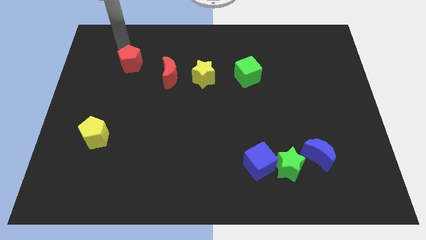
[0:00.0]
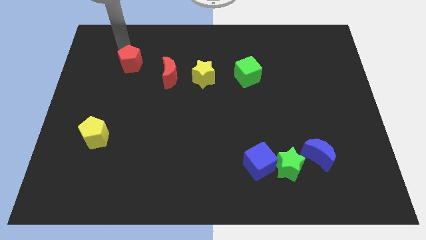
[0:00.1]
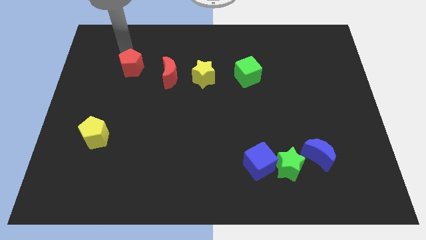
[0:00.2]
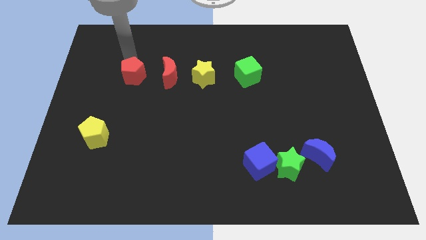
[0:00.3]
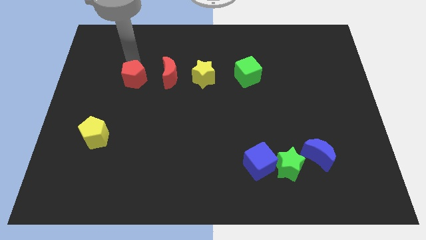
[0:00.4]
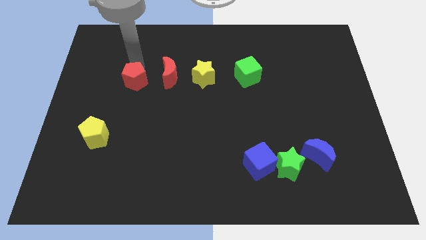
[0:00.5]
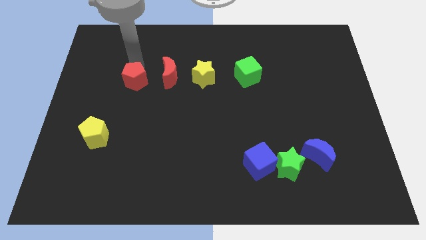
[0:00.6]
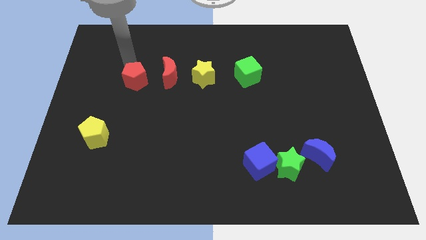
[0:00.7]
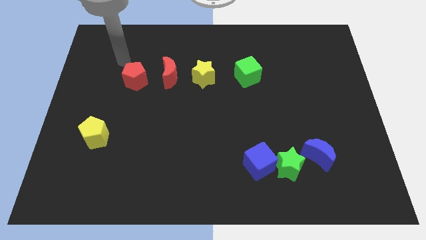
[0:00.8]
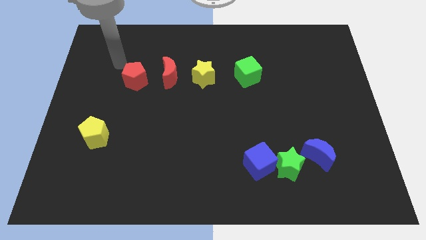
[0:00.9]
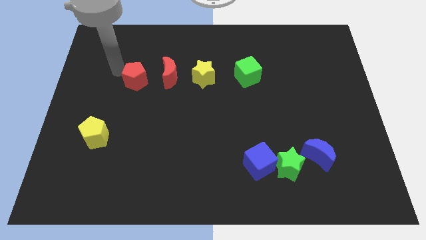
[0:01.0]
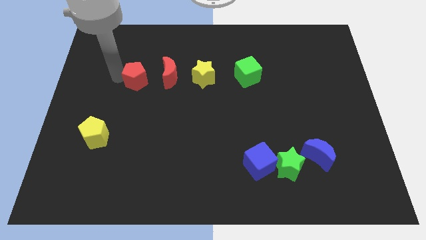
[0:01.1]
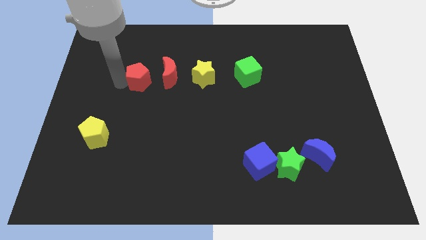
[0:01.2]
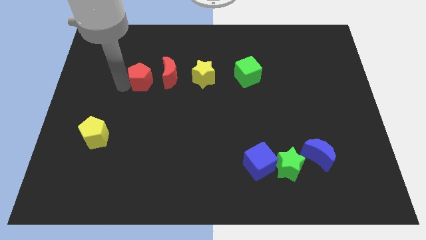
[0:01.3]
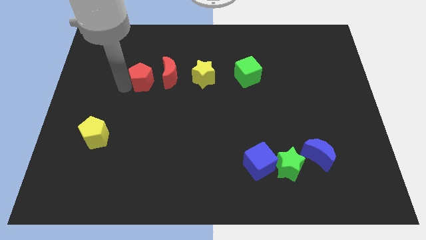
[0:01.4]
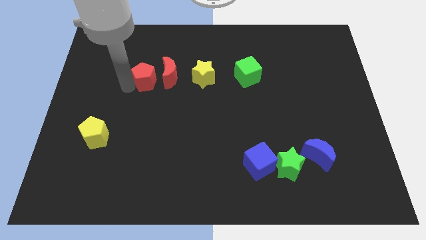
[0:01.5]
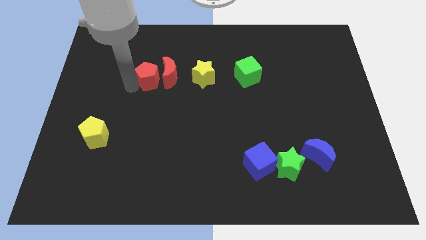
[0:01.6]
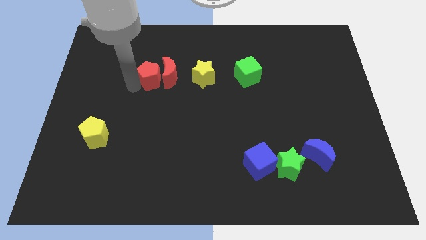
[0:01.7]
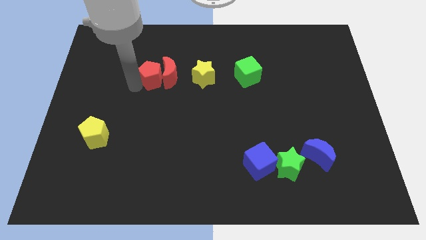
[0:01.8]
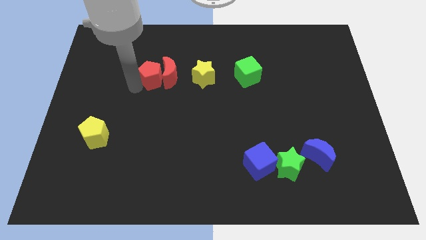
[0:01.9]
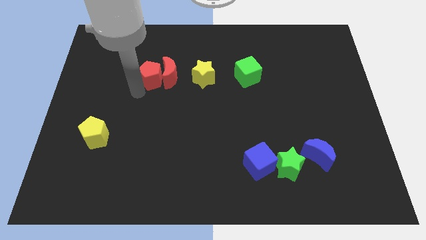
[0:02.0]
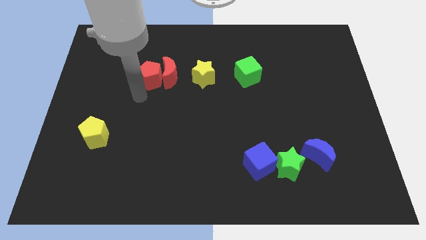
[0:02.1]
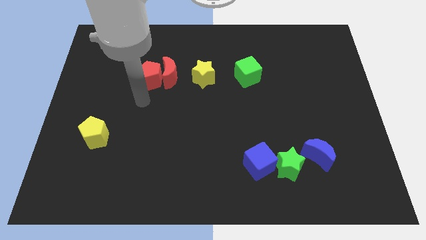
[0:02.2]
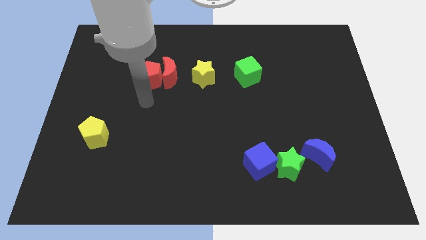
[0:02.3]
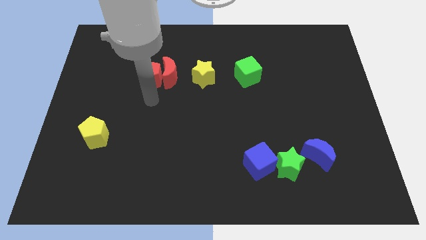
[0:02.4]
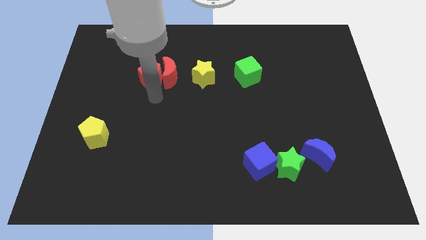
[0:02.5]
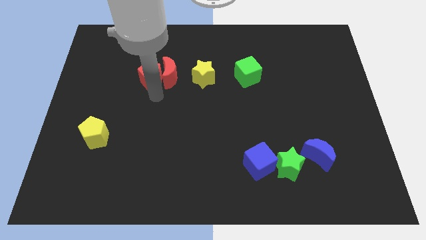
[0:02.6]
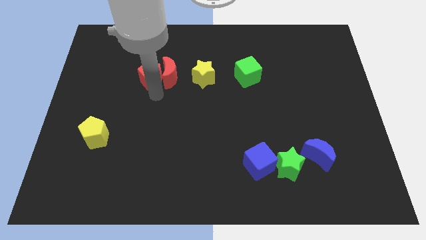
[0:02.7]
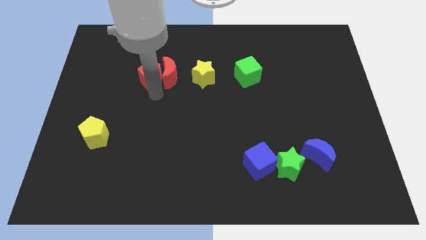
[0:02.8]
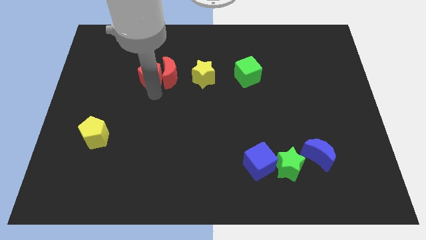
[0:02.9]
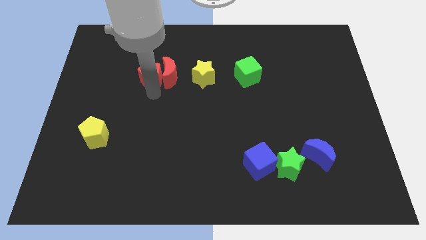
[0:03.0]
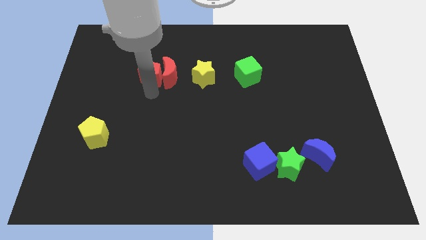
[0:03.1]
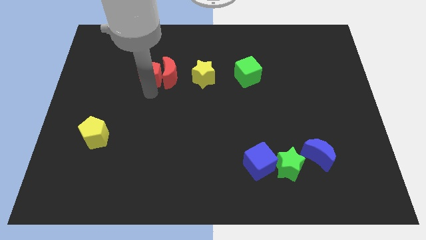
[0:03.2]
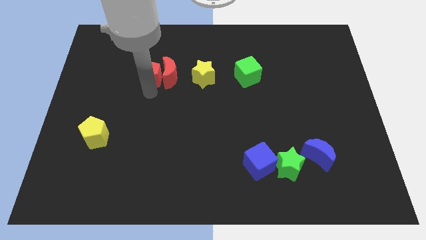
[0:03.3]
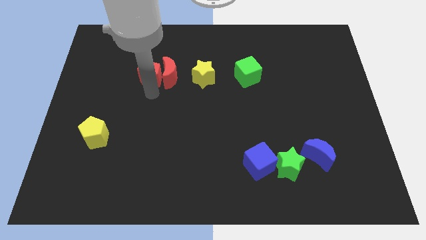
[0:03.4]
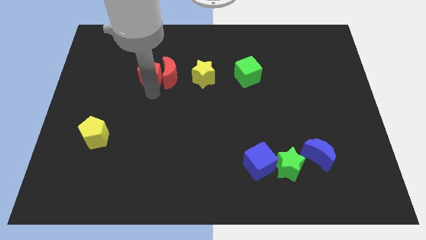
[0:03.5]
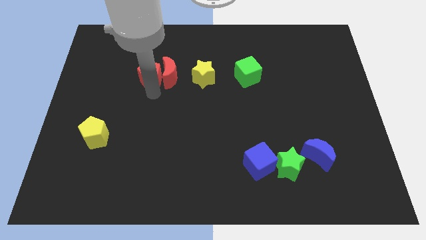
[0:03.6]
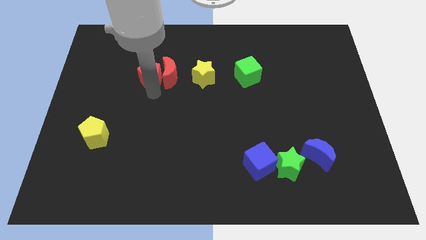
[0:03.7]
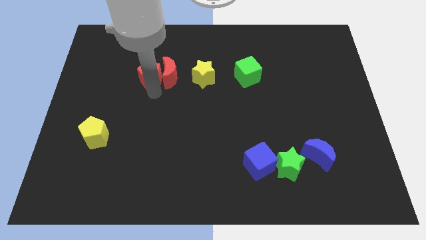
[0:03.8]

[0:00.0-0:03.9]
move the red pentagon close to the left side of the red moon

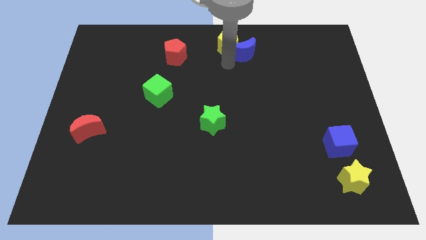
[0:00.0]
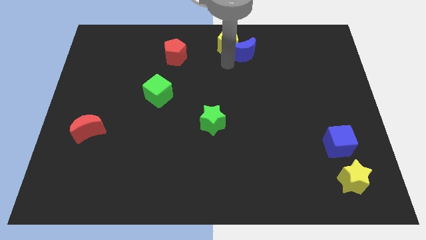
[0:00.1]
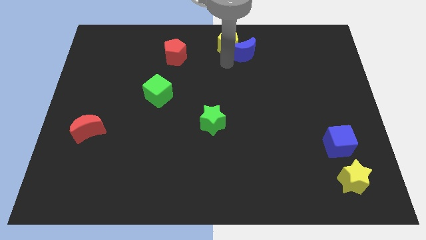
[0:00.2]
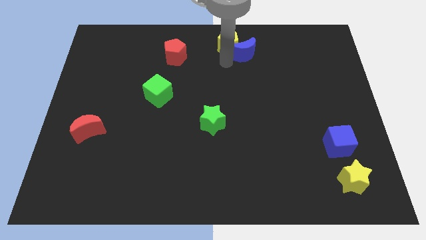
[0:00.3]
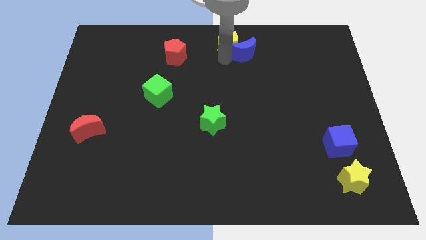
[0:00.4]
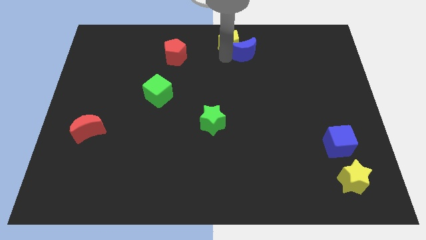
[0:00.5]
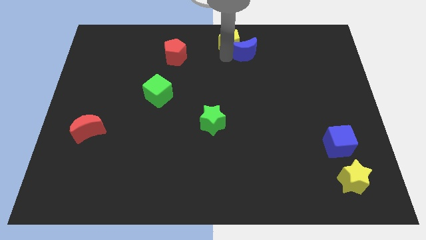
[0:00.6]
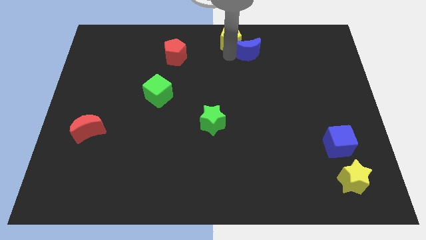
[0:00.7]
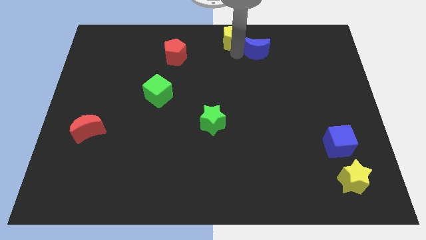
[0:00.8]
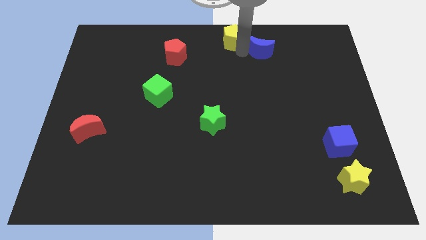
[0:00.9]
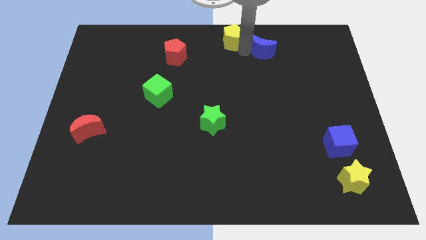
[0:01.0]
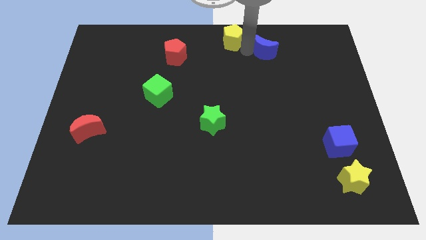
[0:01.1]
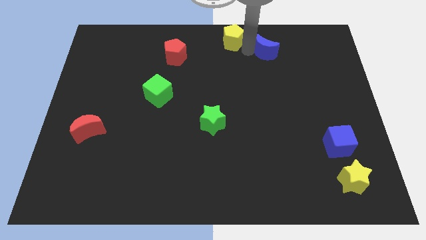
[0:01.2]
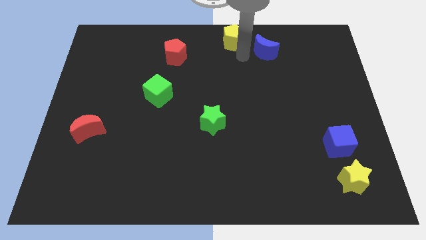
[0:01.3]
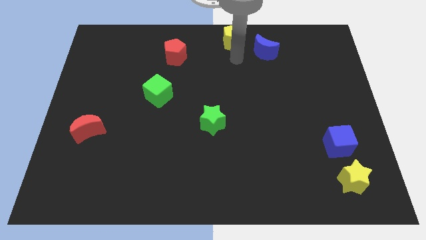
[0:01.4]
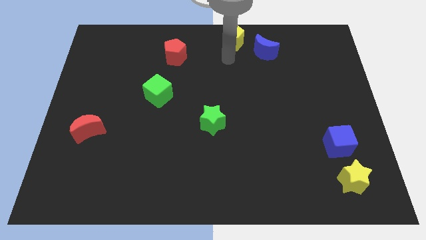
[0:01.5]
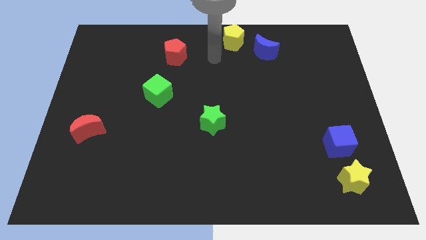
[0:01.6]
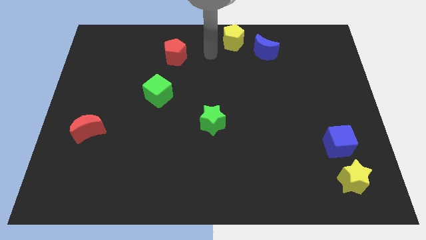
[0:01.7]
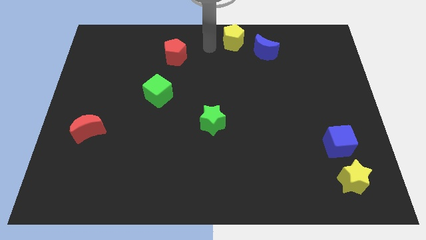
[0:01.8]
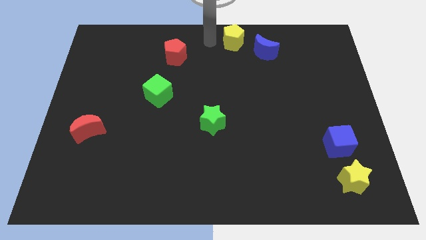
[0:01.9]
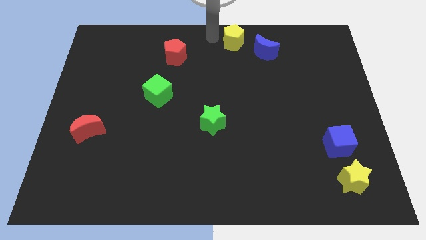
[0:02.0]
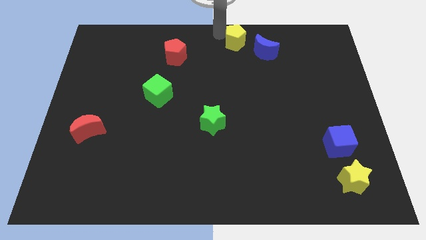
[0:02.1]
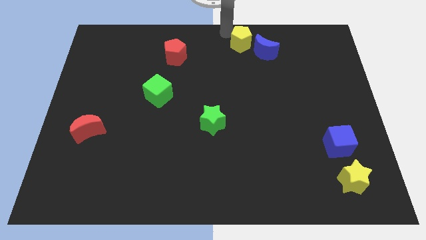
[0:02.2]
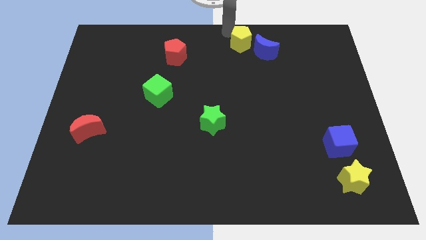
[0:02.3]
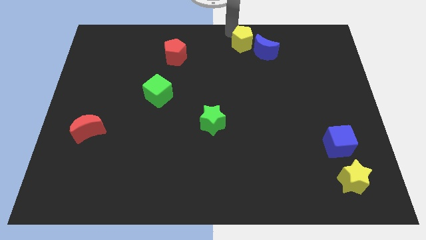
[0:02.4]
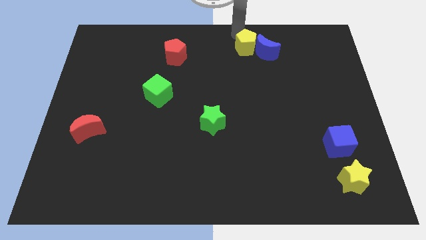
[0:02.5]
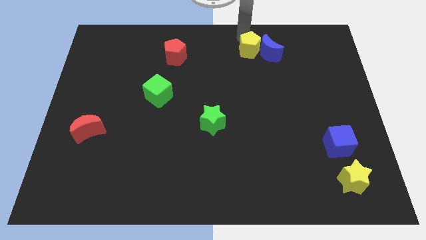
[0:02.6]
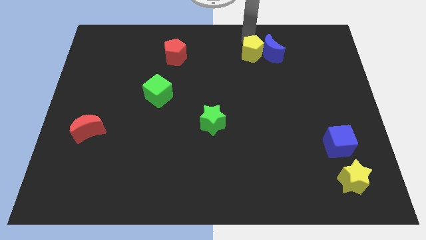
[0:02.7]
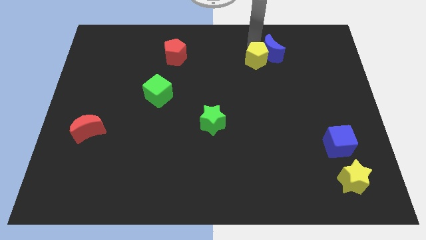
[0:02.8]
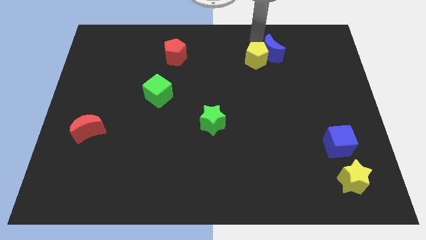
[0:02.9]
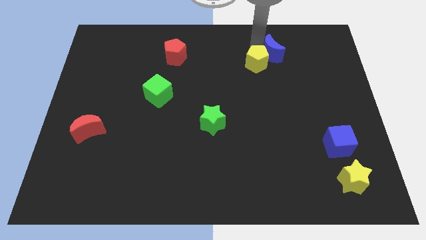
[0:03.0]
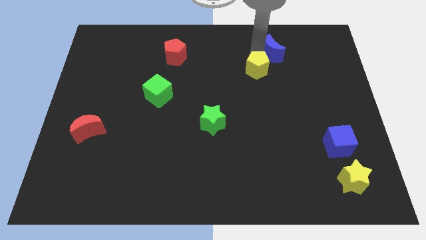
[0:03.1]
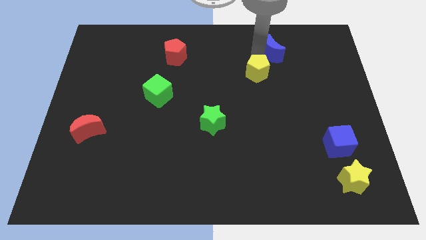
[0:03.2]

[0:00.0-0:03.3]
push yellow pentagon beside blue crescent

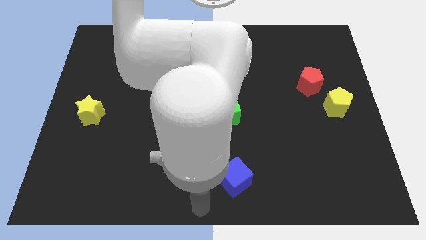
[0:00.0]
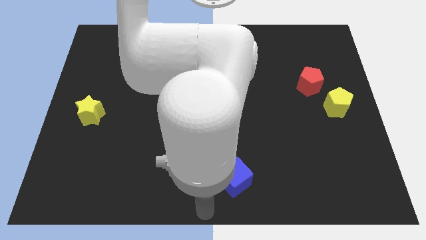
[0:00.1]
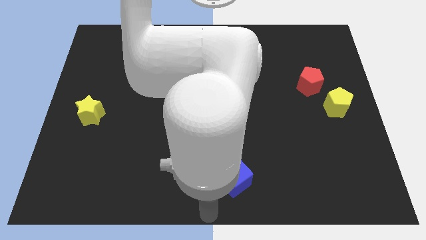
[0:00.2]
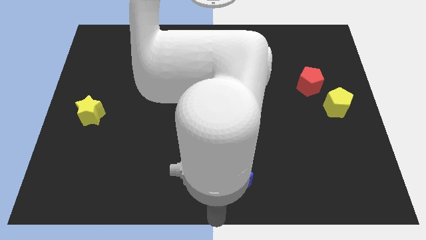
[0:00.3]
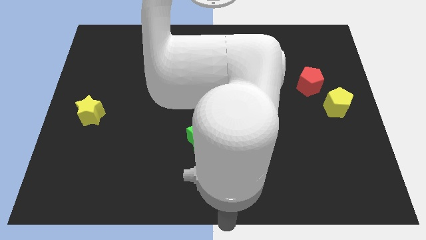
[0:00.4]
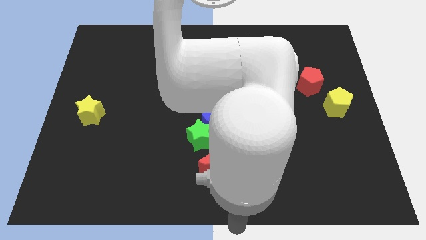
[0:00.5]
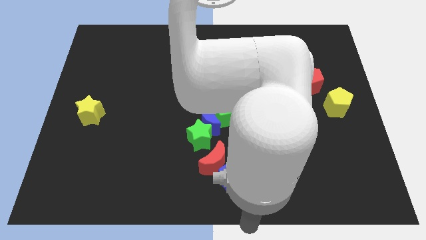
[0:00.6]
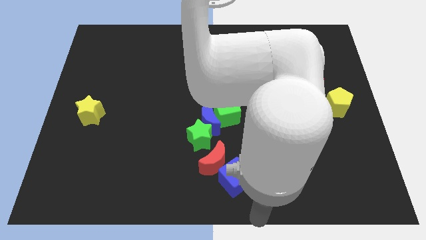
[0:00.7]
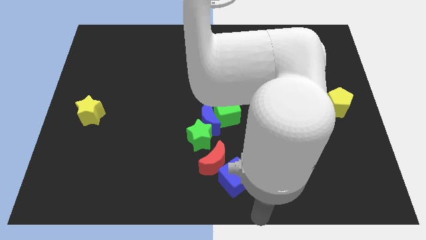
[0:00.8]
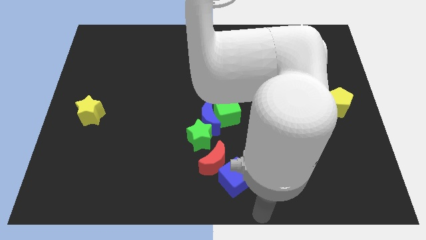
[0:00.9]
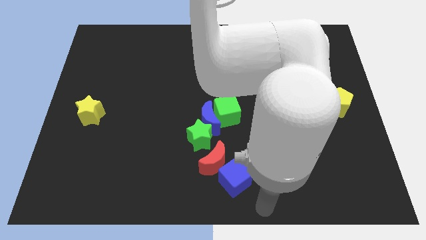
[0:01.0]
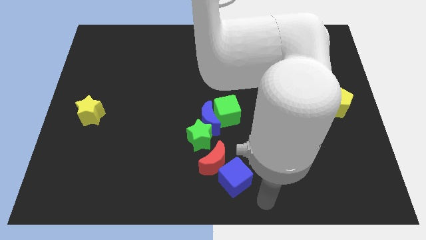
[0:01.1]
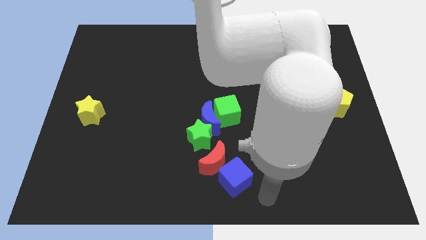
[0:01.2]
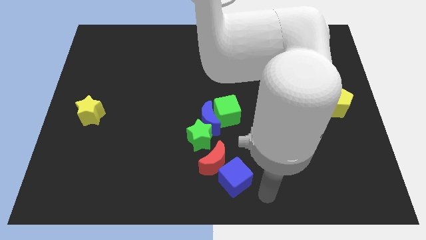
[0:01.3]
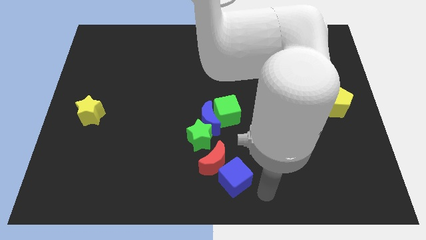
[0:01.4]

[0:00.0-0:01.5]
move arm near blue cube
